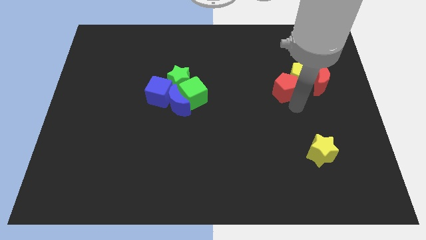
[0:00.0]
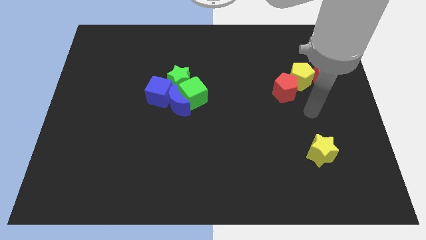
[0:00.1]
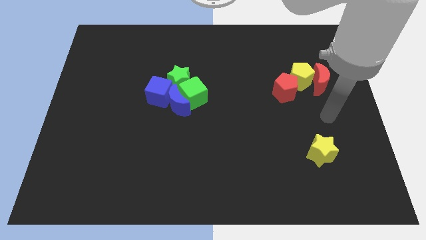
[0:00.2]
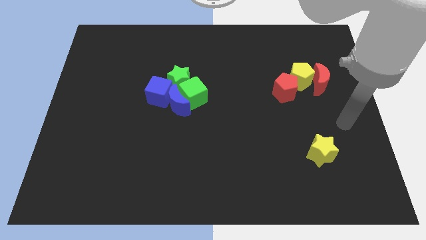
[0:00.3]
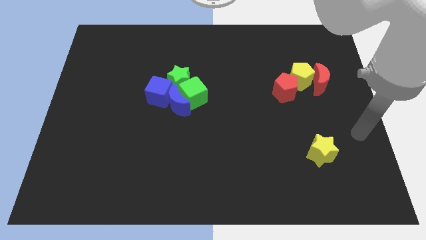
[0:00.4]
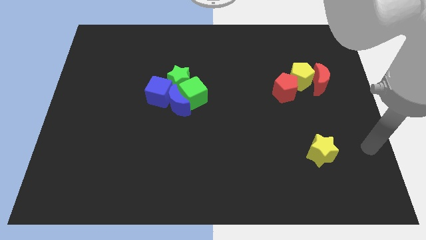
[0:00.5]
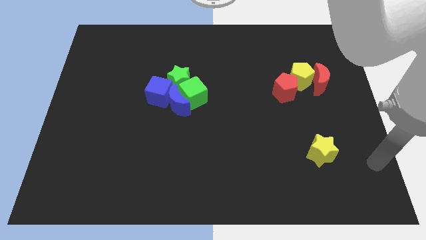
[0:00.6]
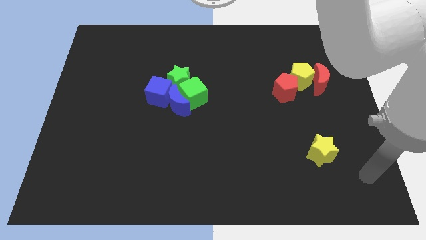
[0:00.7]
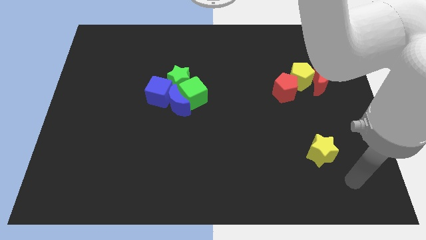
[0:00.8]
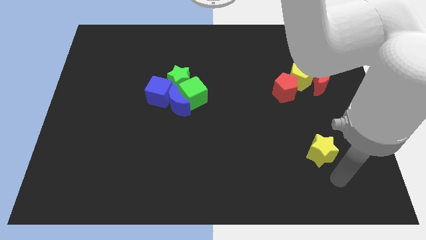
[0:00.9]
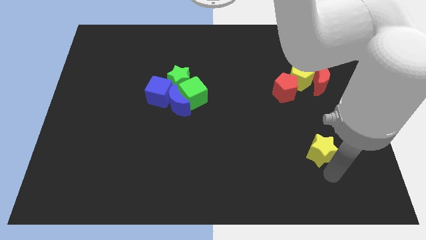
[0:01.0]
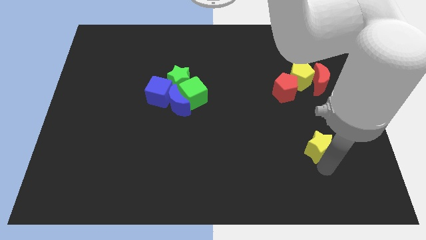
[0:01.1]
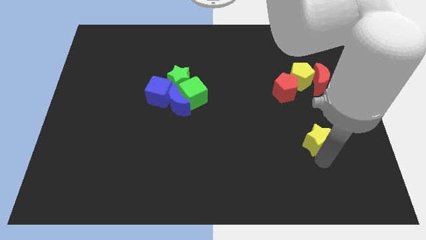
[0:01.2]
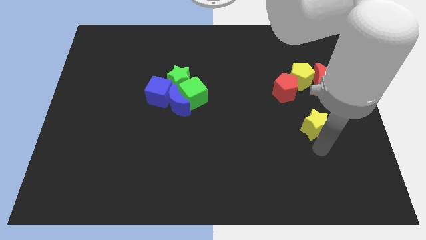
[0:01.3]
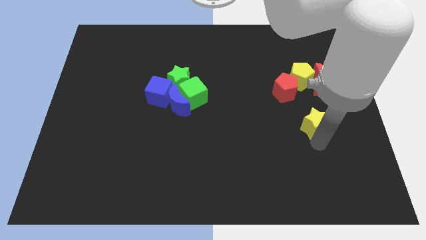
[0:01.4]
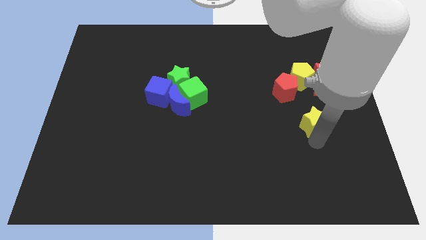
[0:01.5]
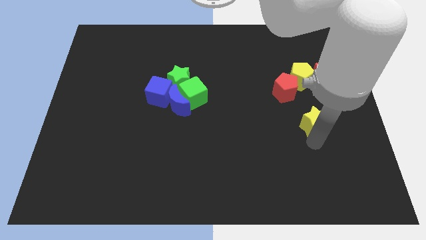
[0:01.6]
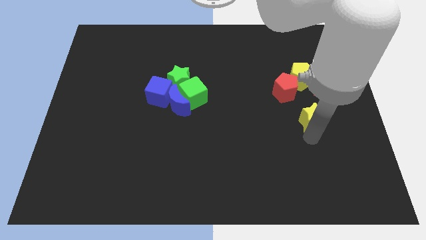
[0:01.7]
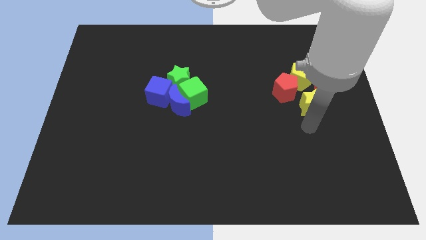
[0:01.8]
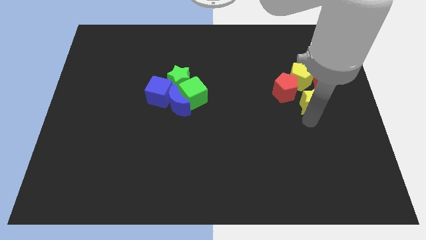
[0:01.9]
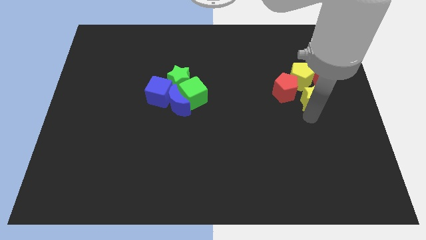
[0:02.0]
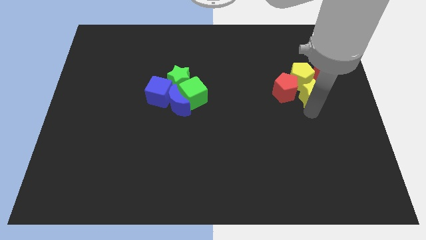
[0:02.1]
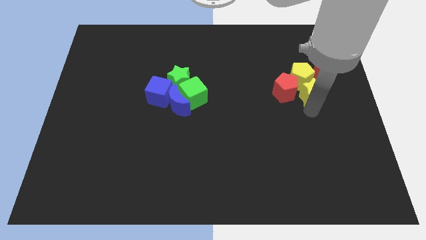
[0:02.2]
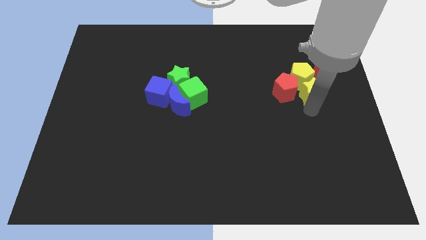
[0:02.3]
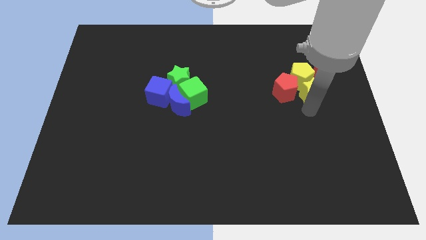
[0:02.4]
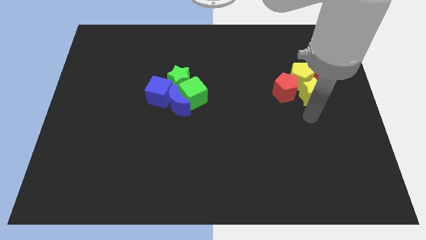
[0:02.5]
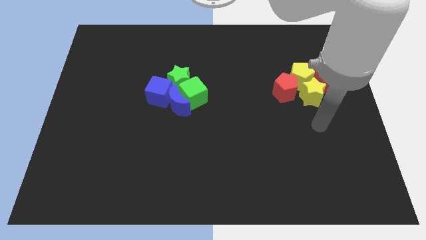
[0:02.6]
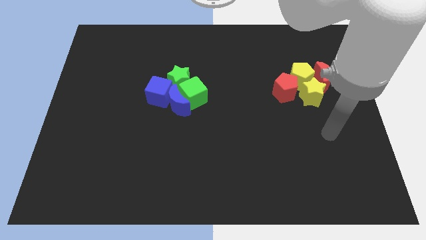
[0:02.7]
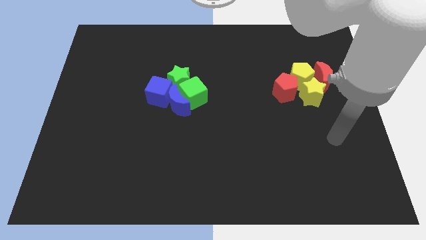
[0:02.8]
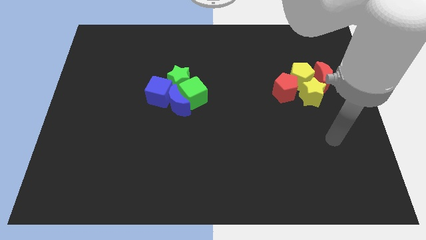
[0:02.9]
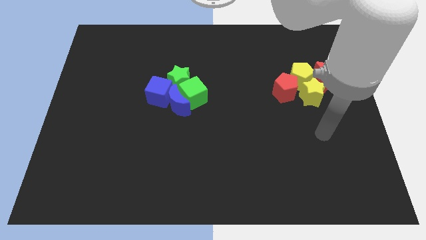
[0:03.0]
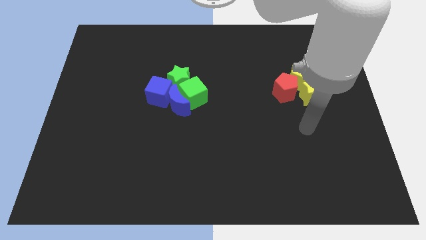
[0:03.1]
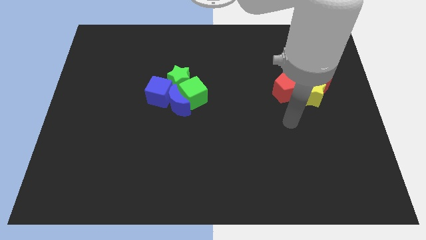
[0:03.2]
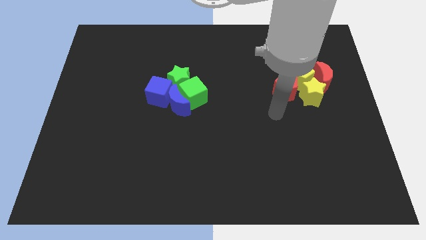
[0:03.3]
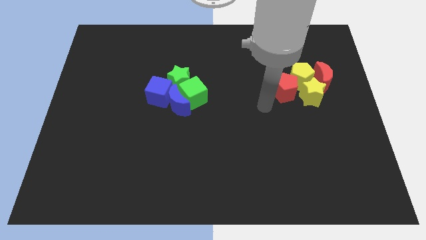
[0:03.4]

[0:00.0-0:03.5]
push the yellow star into the yellow pentagon

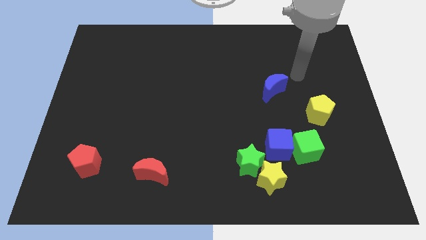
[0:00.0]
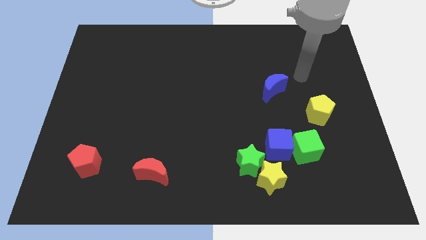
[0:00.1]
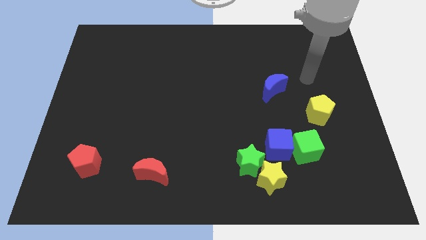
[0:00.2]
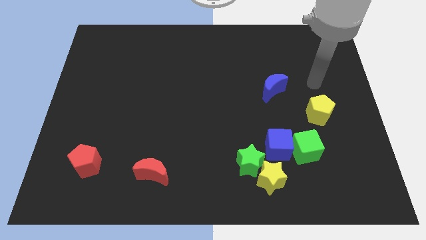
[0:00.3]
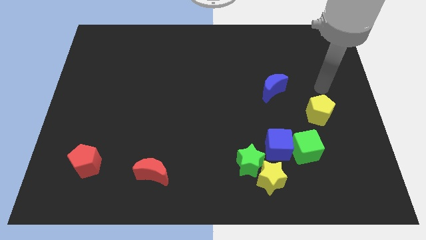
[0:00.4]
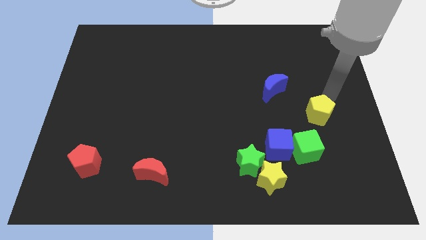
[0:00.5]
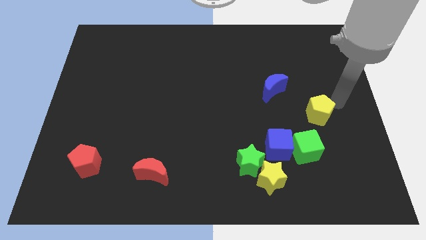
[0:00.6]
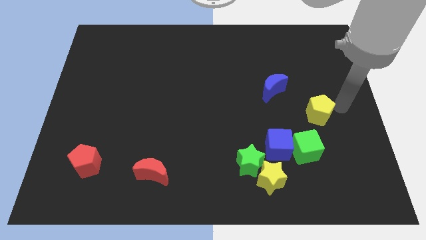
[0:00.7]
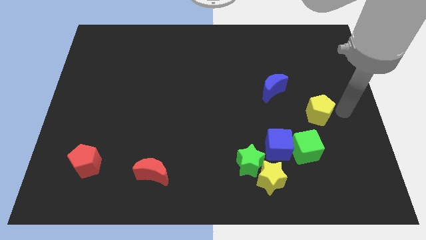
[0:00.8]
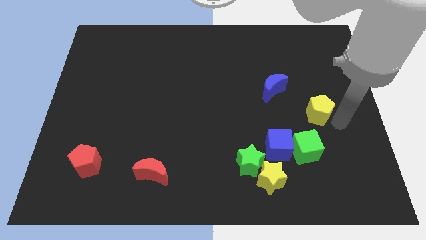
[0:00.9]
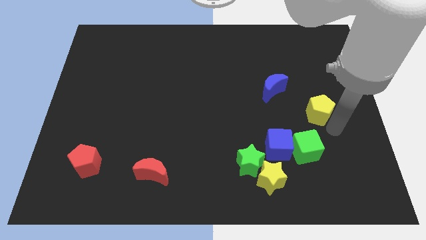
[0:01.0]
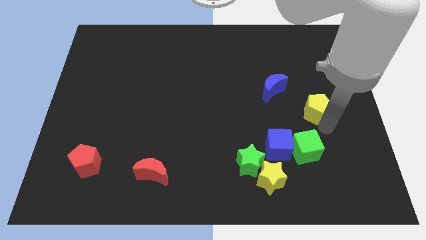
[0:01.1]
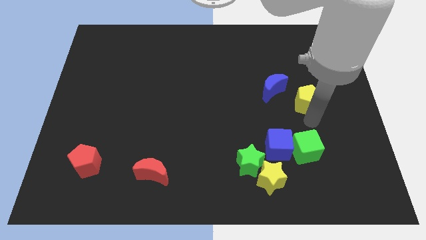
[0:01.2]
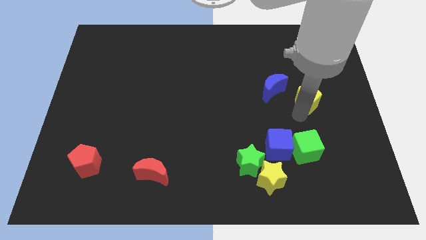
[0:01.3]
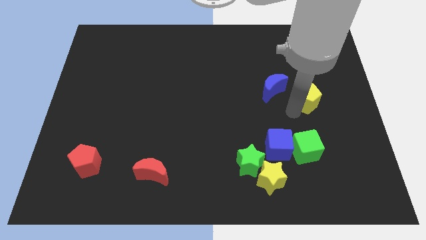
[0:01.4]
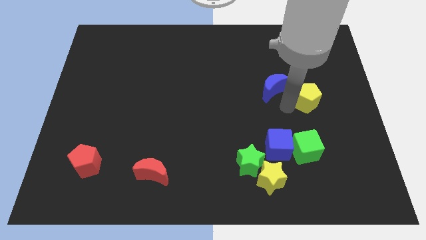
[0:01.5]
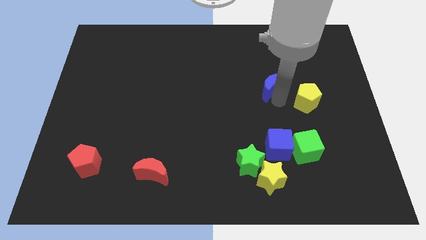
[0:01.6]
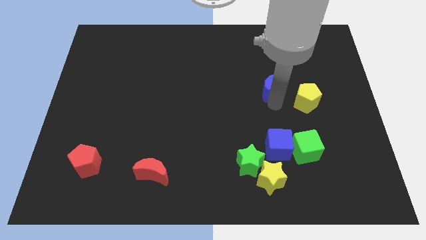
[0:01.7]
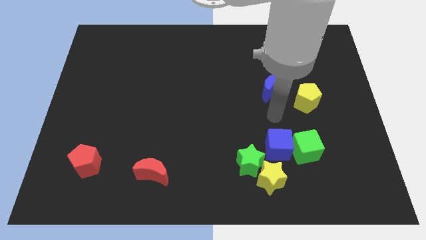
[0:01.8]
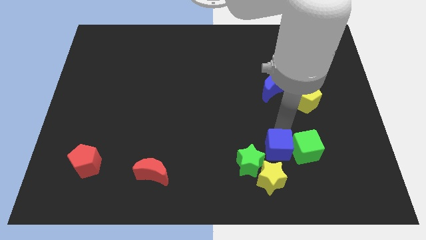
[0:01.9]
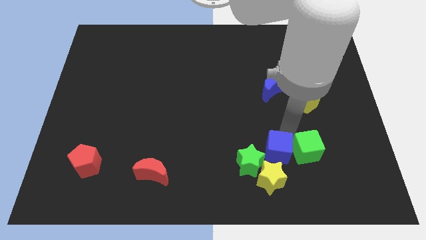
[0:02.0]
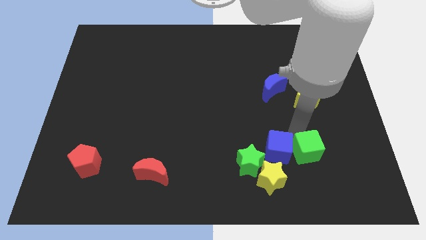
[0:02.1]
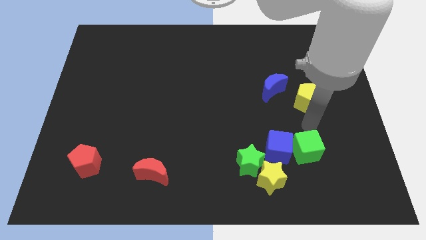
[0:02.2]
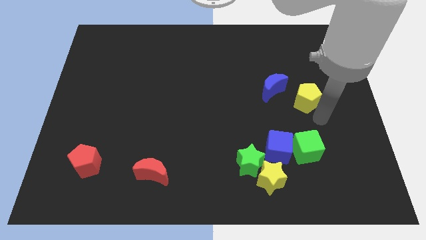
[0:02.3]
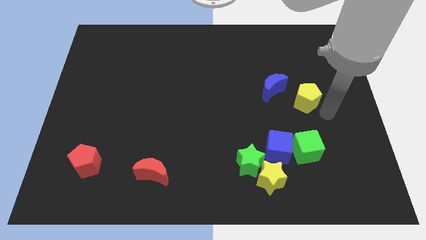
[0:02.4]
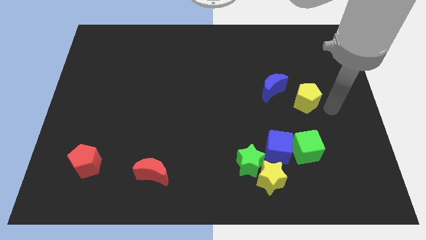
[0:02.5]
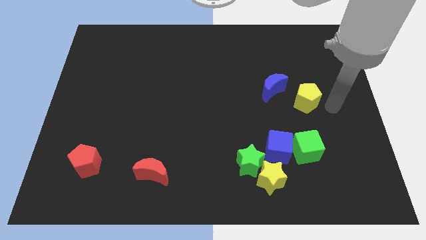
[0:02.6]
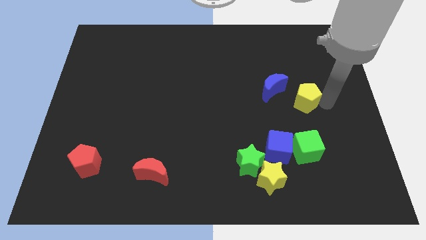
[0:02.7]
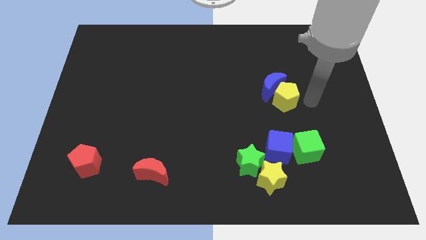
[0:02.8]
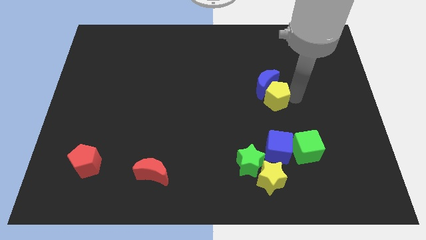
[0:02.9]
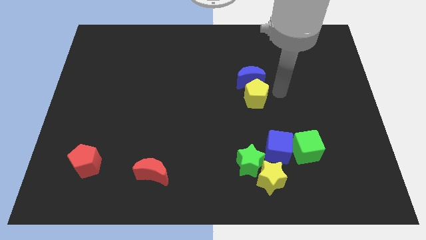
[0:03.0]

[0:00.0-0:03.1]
push the yellow pentagon into the right side of the blue crescent

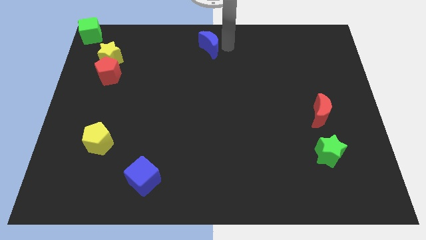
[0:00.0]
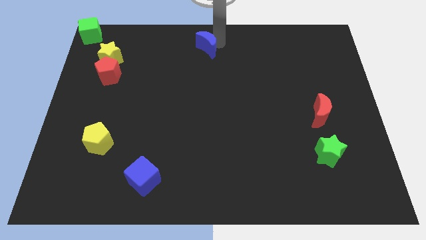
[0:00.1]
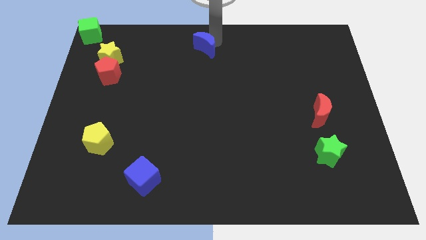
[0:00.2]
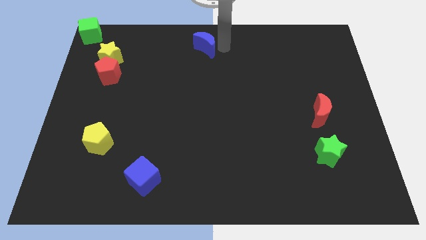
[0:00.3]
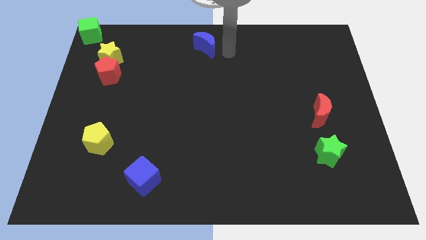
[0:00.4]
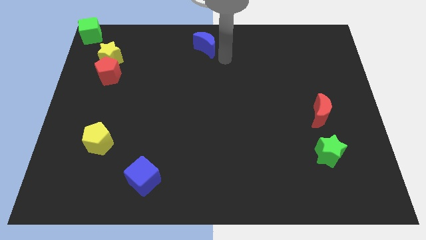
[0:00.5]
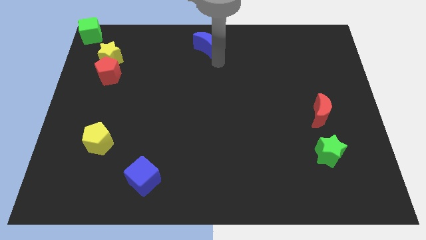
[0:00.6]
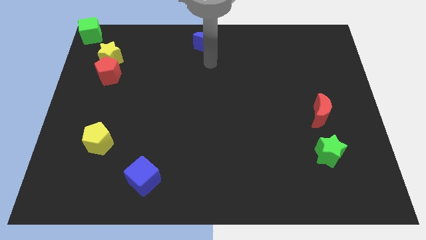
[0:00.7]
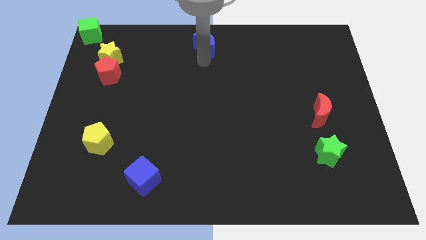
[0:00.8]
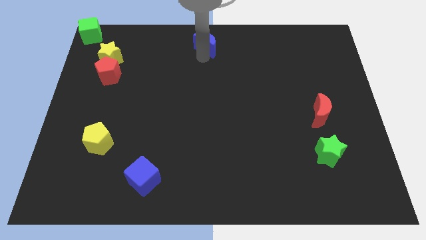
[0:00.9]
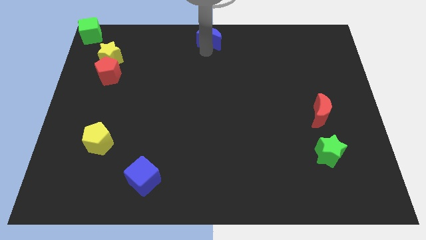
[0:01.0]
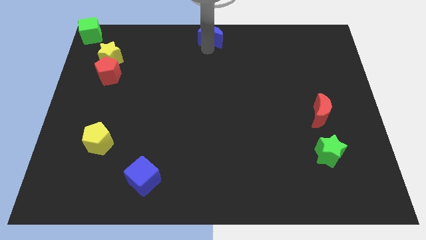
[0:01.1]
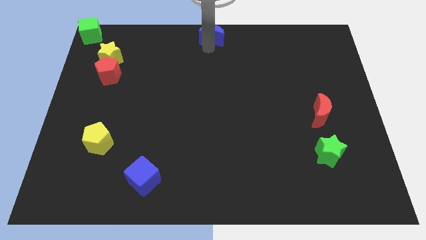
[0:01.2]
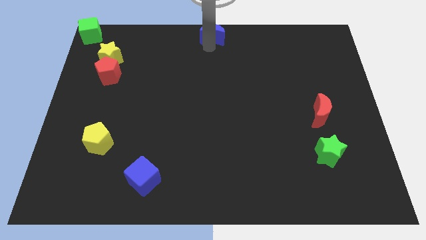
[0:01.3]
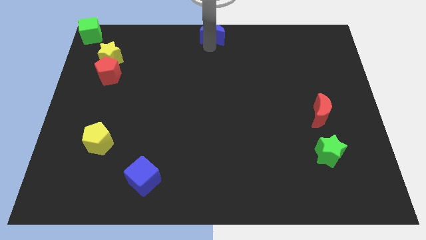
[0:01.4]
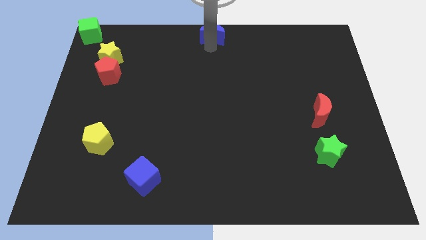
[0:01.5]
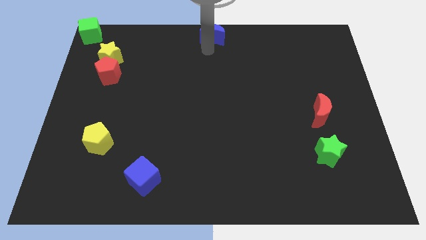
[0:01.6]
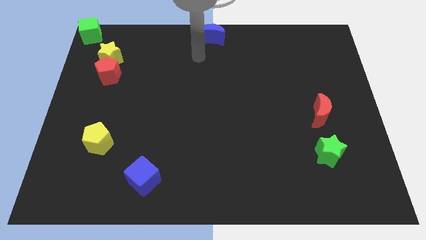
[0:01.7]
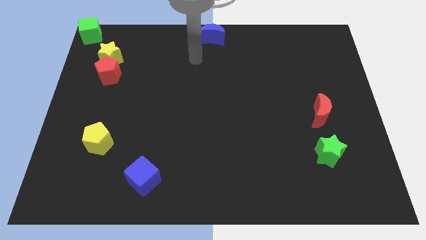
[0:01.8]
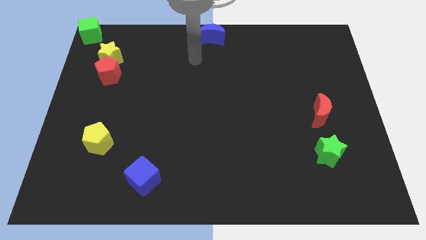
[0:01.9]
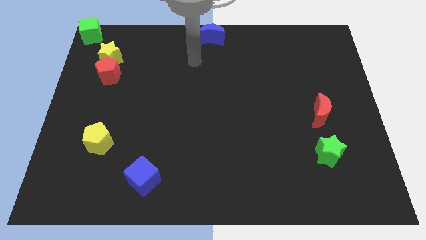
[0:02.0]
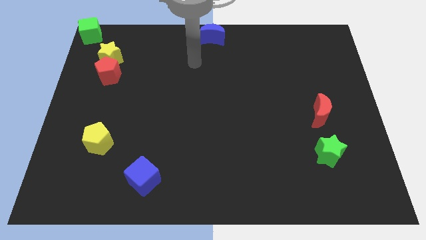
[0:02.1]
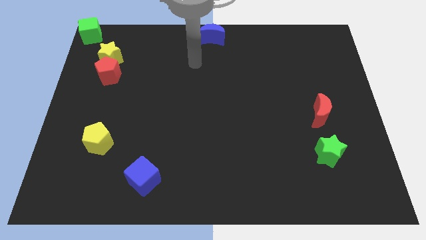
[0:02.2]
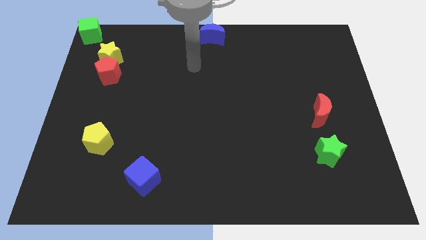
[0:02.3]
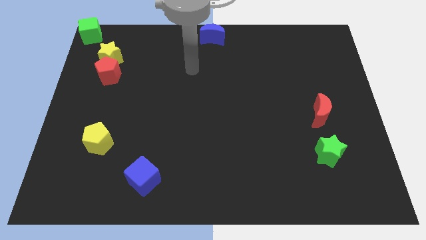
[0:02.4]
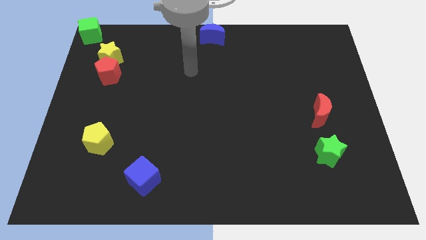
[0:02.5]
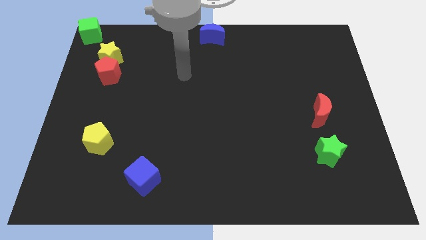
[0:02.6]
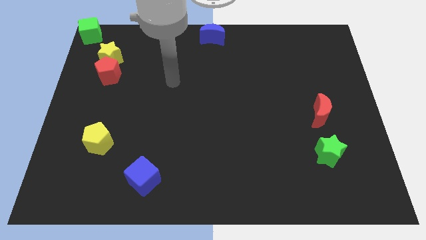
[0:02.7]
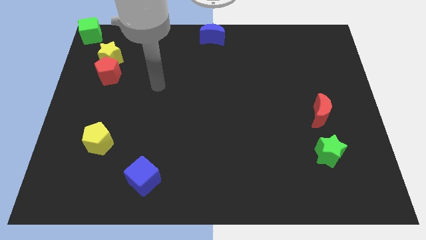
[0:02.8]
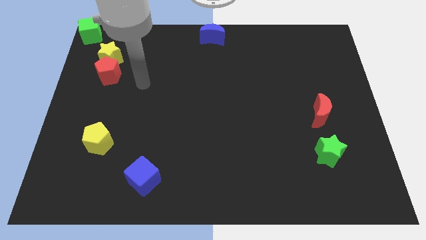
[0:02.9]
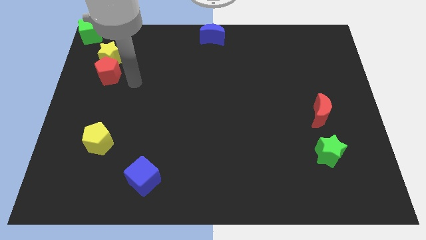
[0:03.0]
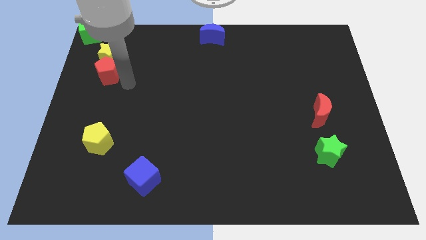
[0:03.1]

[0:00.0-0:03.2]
place blue crescent at center top
